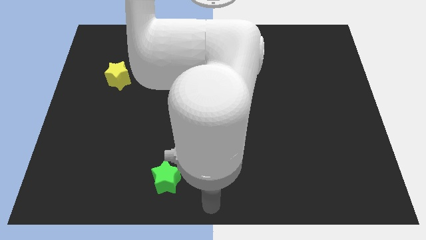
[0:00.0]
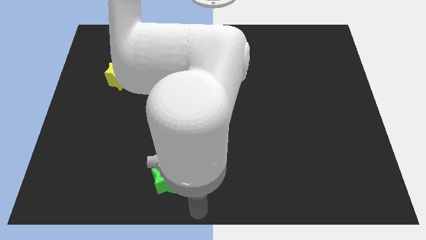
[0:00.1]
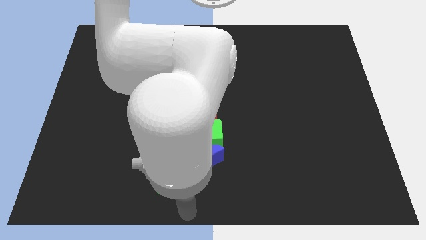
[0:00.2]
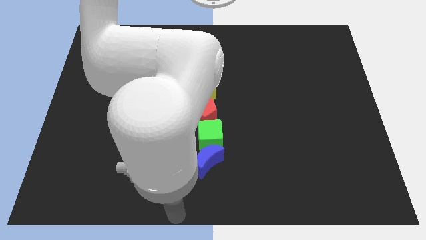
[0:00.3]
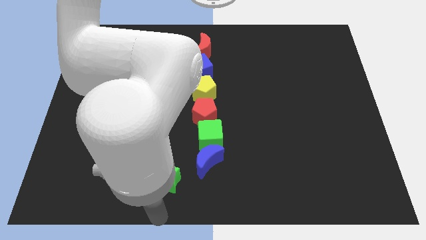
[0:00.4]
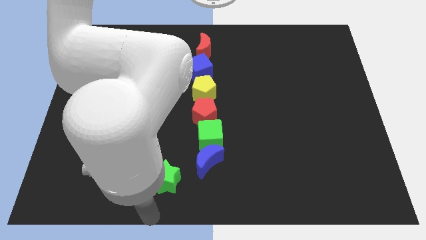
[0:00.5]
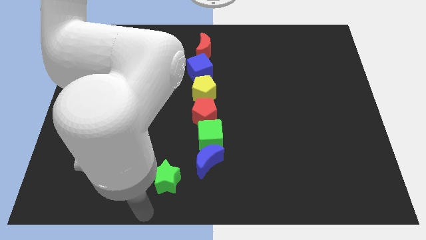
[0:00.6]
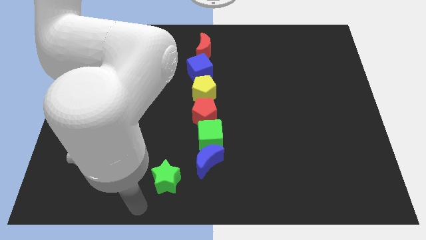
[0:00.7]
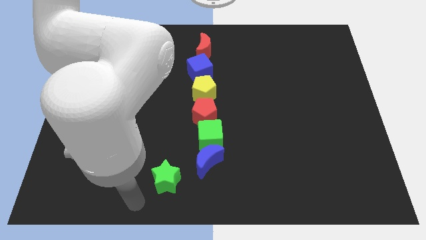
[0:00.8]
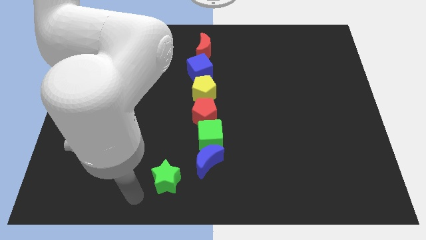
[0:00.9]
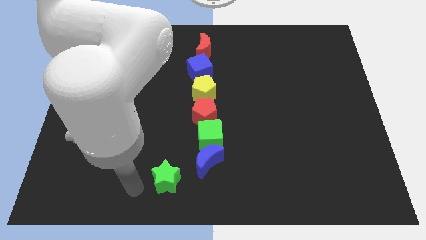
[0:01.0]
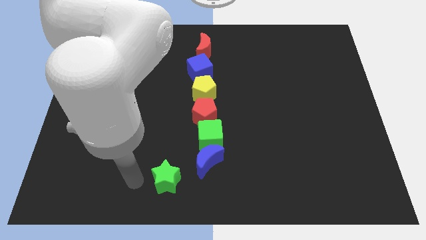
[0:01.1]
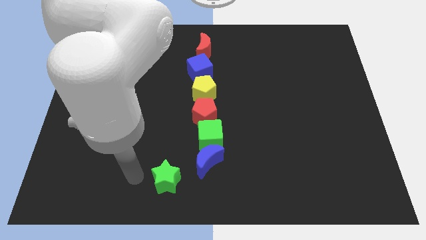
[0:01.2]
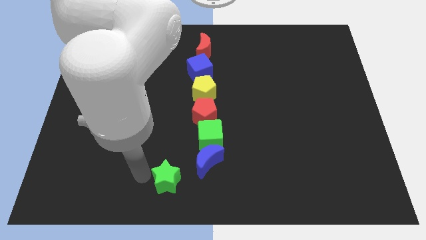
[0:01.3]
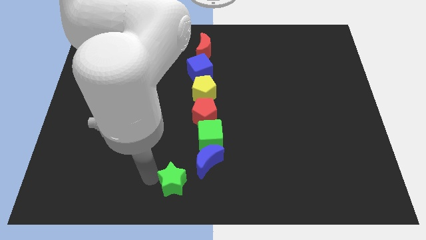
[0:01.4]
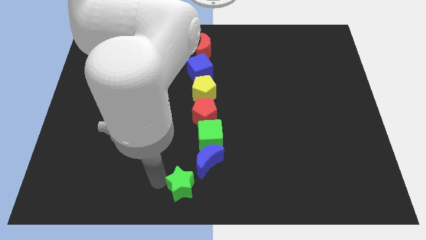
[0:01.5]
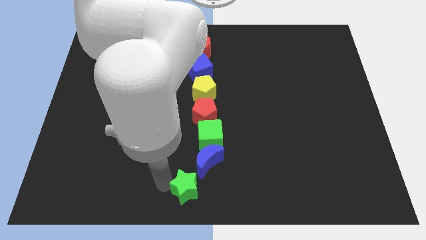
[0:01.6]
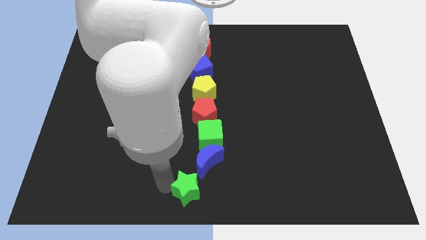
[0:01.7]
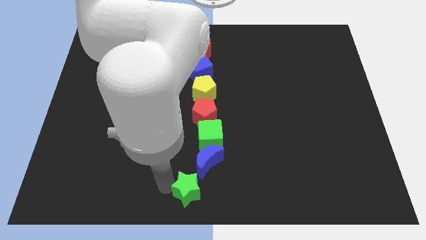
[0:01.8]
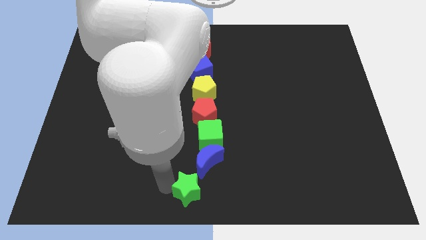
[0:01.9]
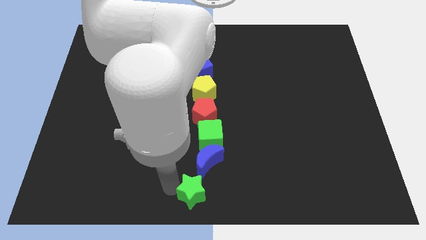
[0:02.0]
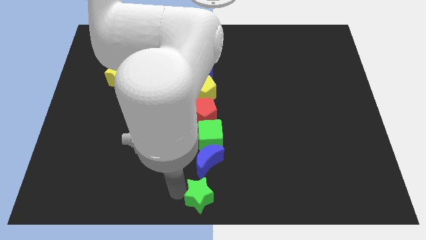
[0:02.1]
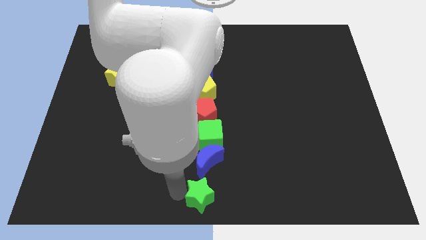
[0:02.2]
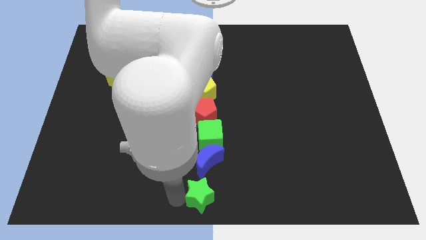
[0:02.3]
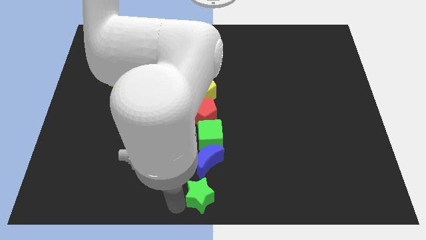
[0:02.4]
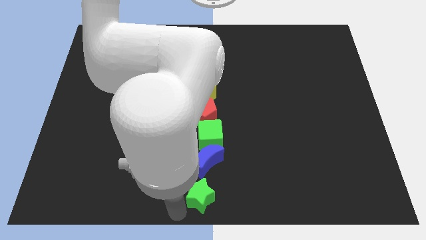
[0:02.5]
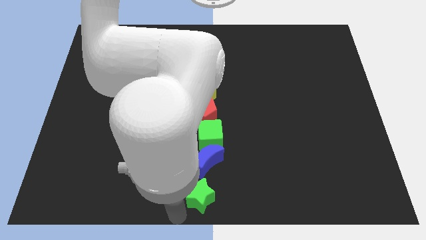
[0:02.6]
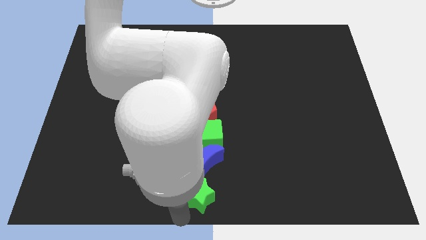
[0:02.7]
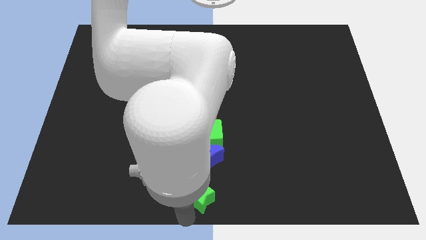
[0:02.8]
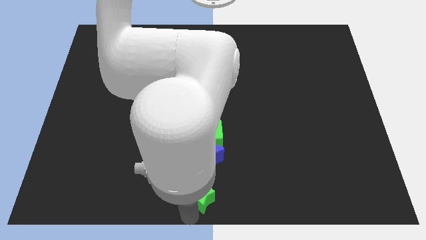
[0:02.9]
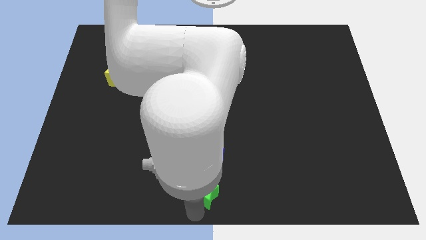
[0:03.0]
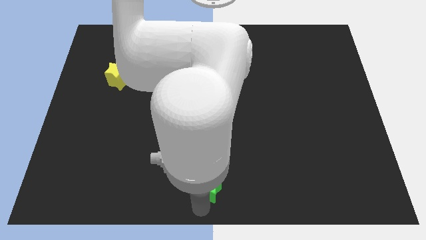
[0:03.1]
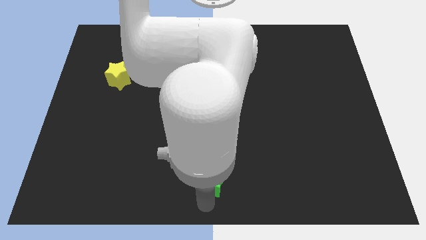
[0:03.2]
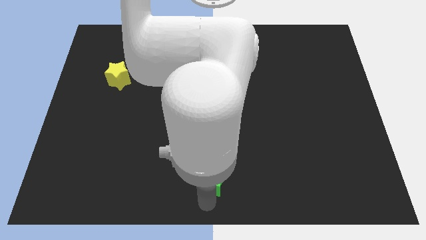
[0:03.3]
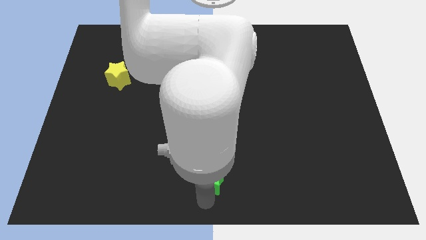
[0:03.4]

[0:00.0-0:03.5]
move the green star to the bottom of the blue crescent

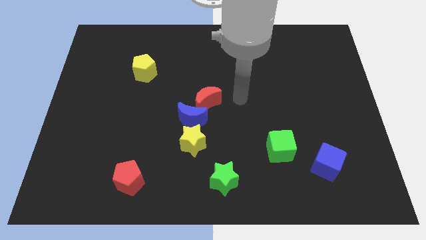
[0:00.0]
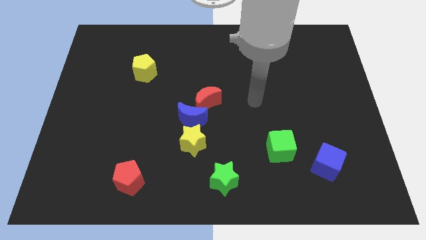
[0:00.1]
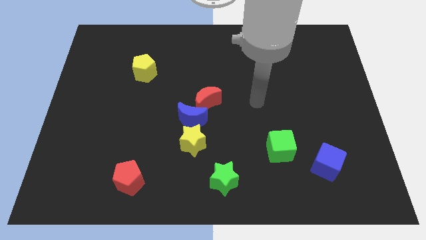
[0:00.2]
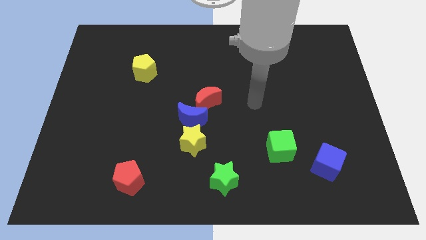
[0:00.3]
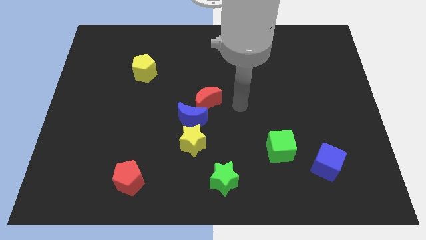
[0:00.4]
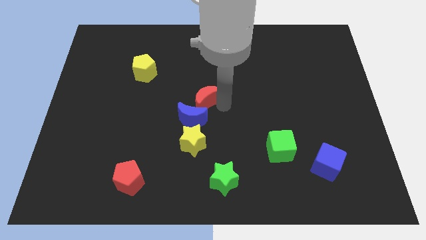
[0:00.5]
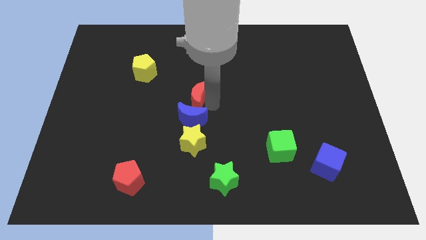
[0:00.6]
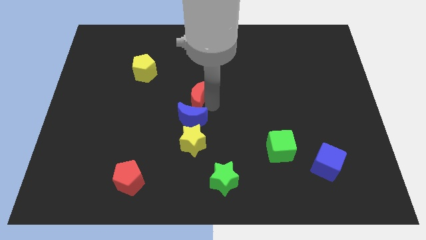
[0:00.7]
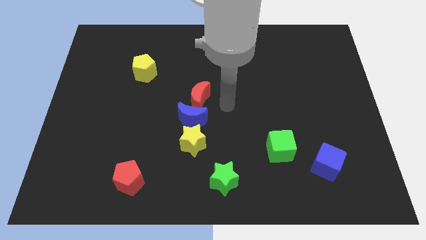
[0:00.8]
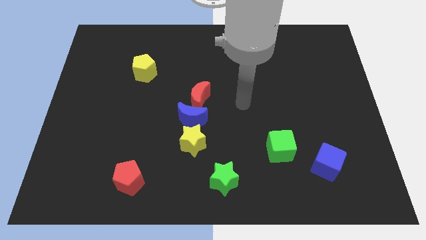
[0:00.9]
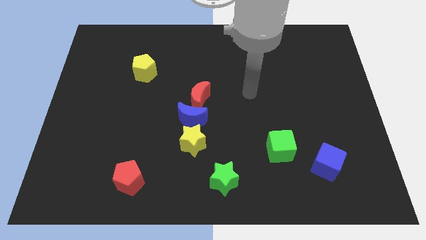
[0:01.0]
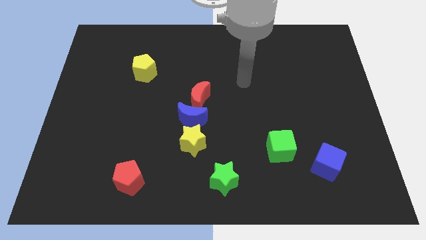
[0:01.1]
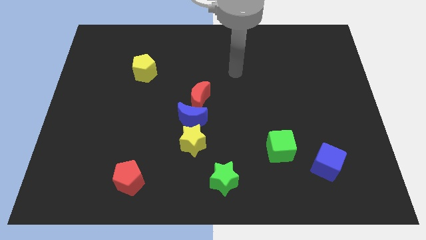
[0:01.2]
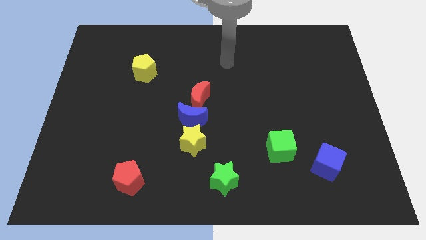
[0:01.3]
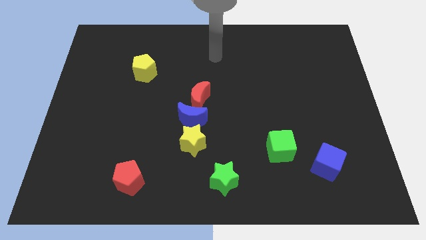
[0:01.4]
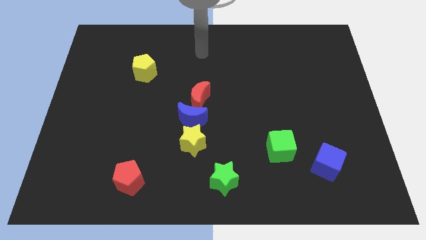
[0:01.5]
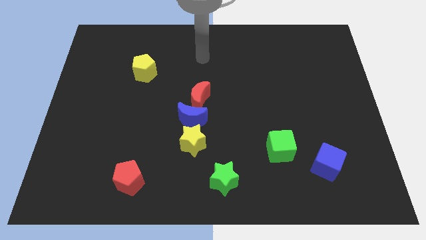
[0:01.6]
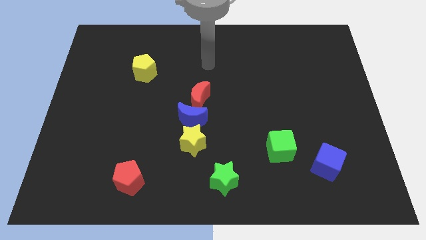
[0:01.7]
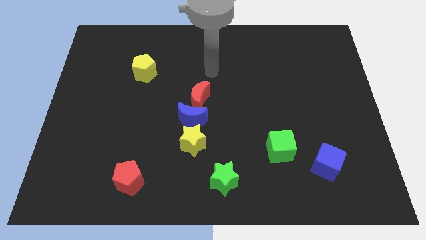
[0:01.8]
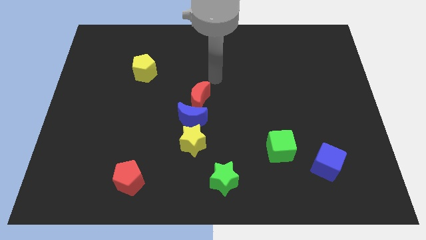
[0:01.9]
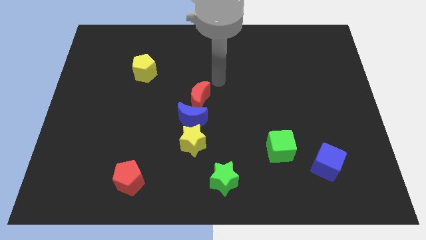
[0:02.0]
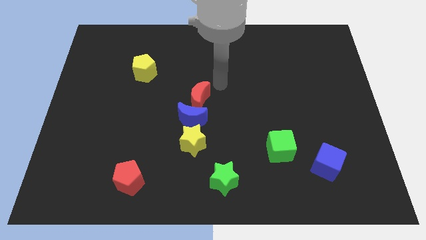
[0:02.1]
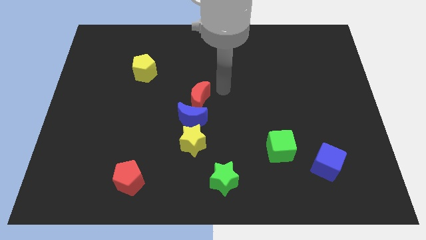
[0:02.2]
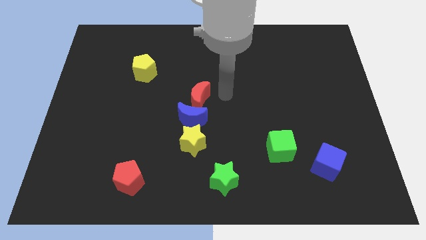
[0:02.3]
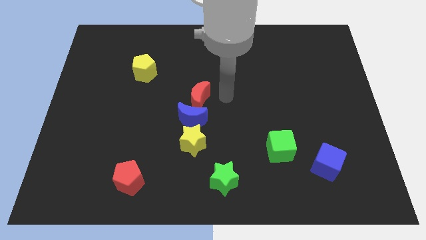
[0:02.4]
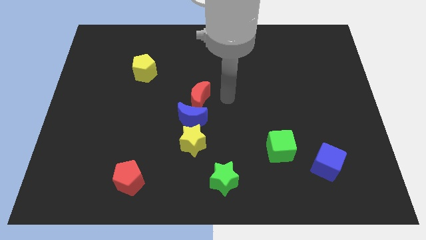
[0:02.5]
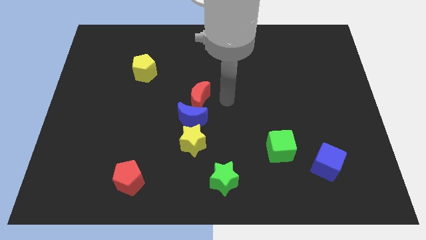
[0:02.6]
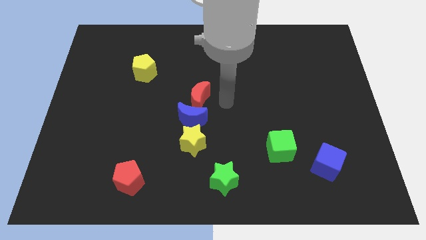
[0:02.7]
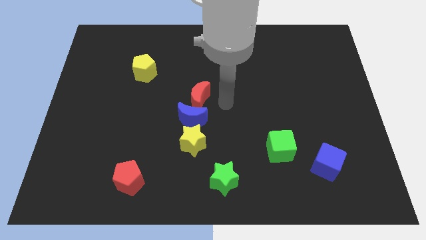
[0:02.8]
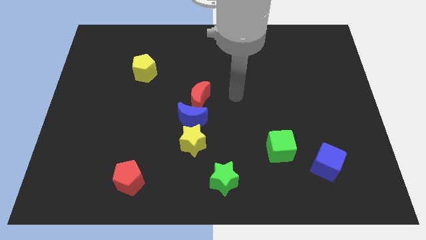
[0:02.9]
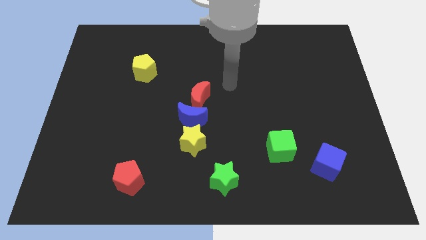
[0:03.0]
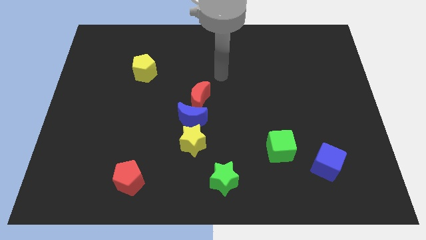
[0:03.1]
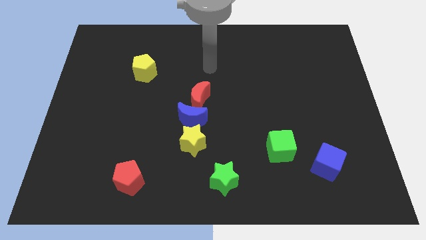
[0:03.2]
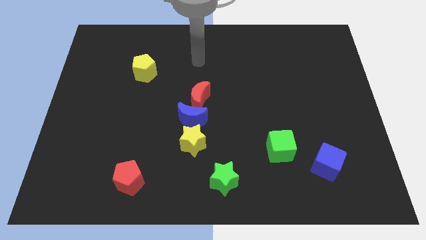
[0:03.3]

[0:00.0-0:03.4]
adjust red moon slightly

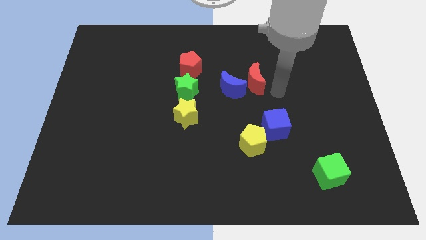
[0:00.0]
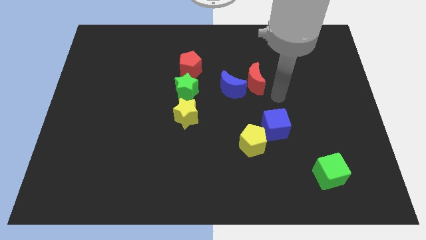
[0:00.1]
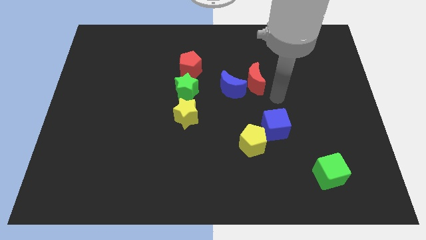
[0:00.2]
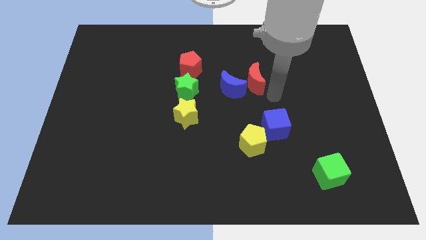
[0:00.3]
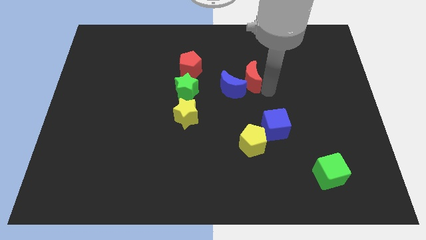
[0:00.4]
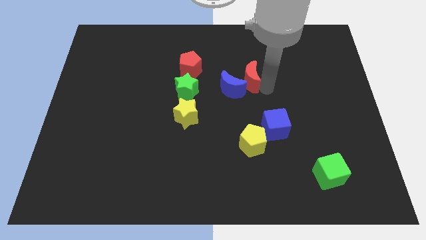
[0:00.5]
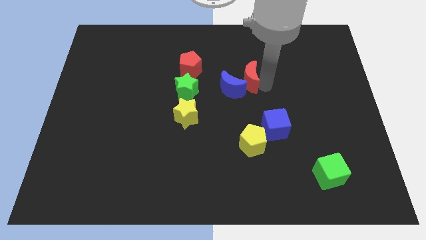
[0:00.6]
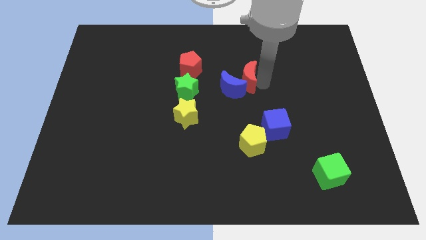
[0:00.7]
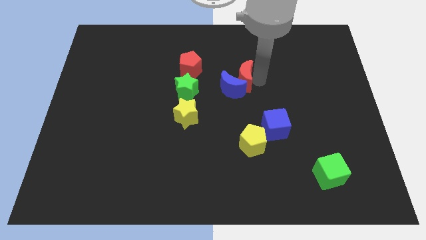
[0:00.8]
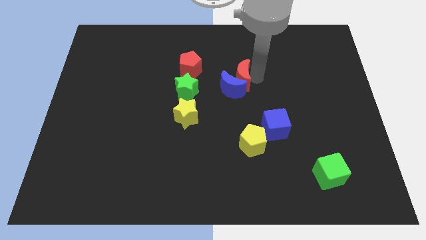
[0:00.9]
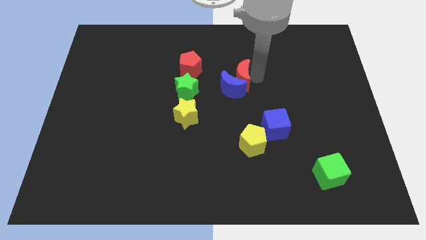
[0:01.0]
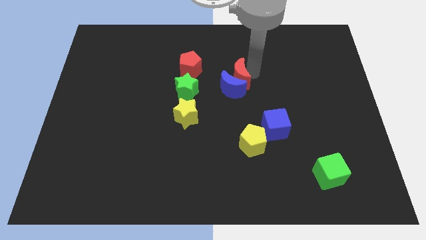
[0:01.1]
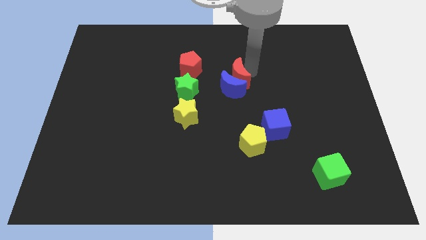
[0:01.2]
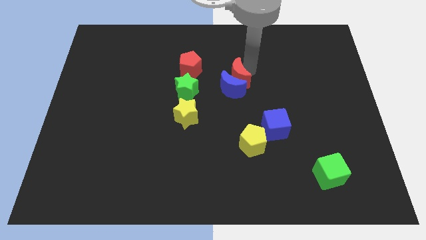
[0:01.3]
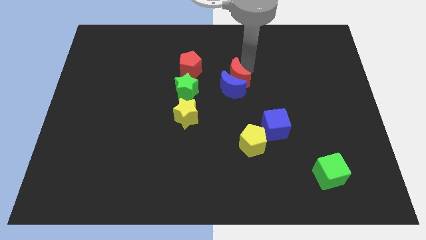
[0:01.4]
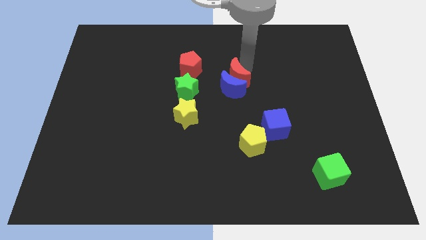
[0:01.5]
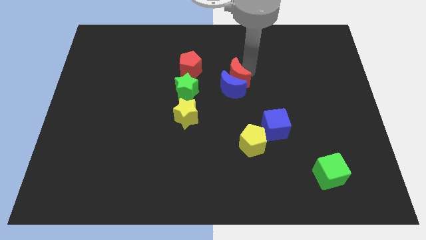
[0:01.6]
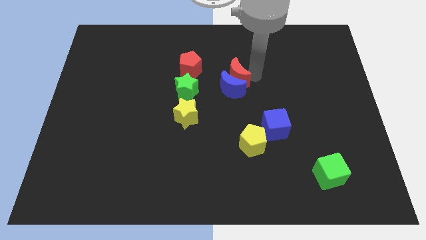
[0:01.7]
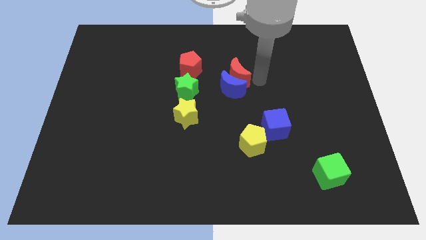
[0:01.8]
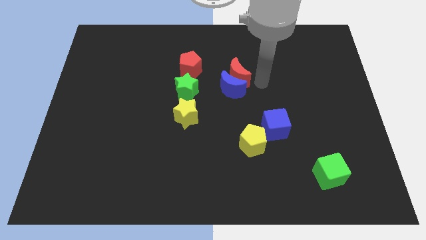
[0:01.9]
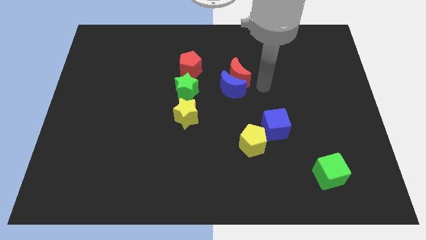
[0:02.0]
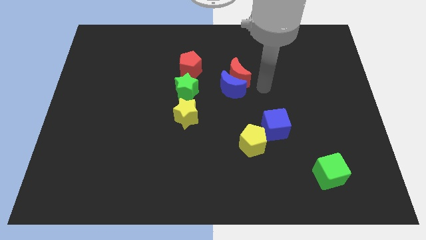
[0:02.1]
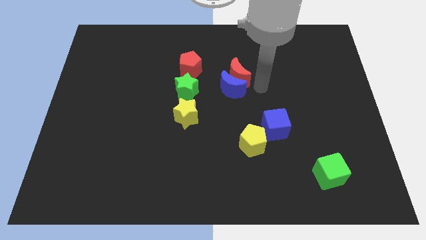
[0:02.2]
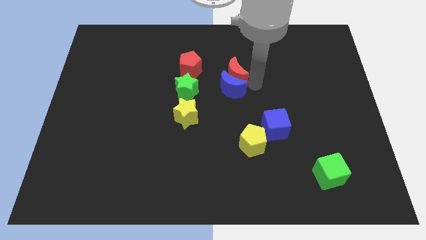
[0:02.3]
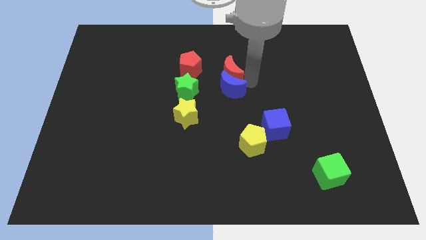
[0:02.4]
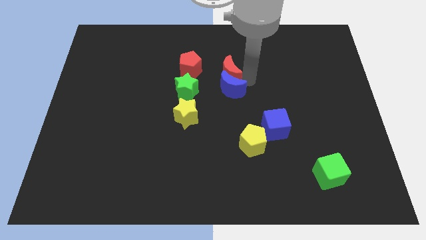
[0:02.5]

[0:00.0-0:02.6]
slightly move the red crescent towards the top of the blue crescent
